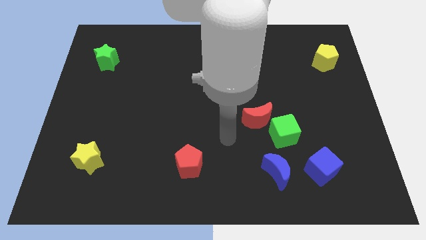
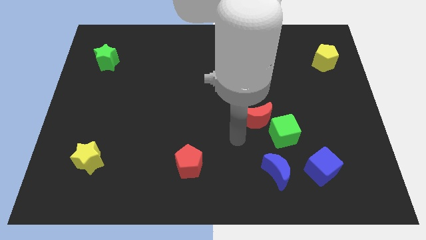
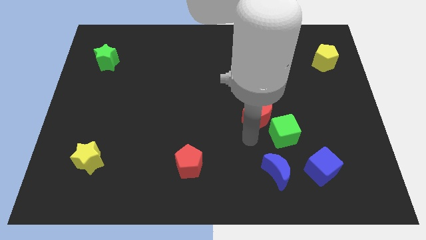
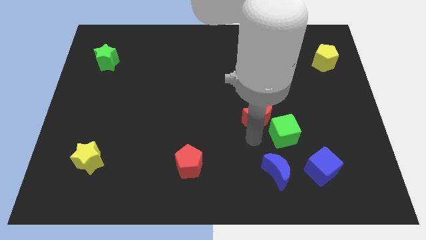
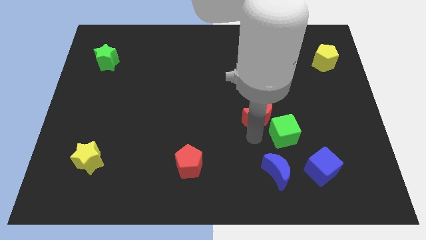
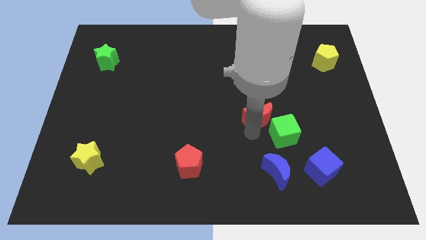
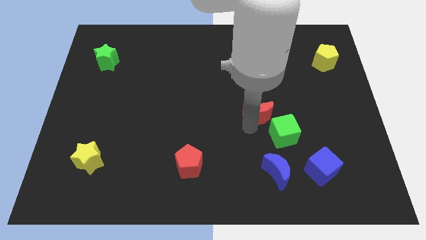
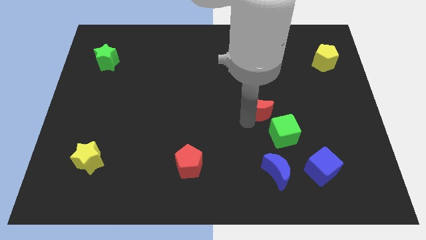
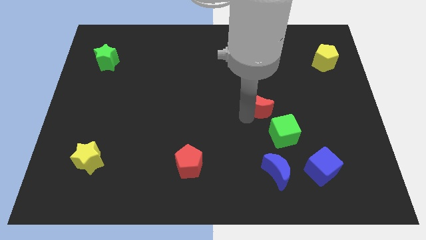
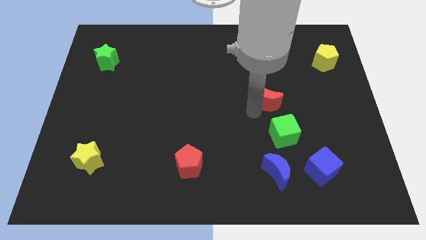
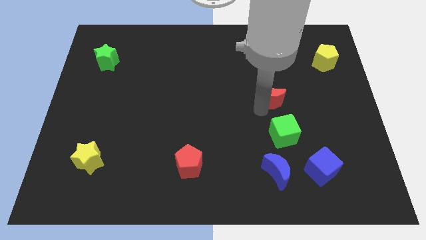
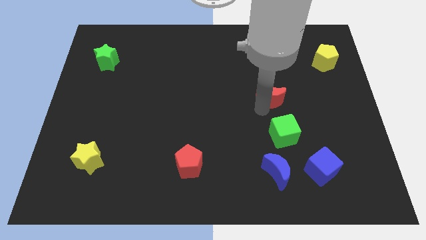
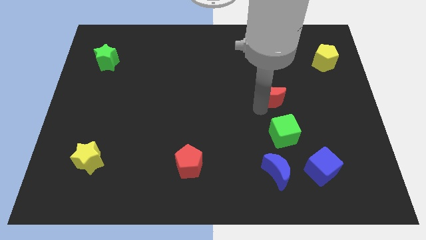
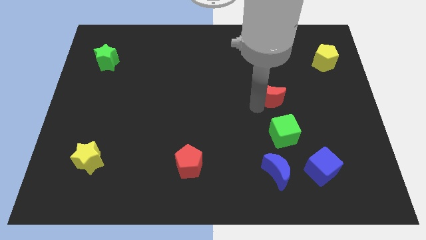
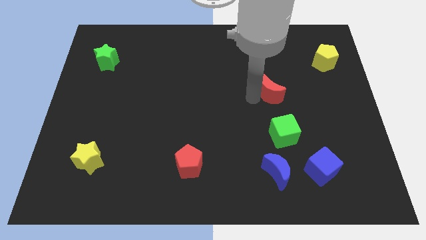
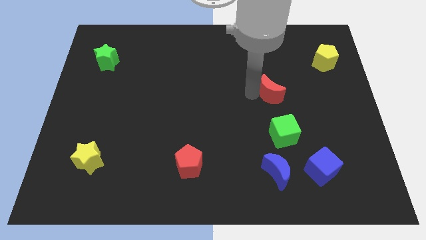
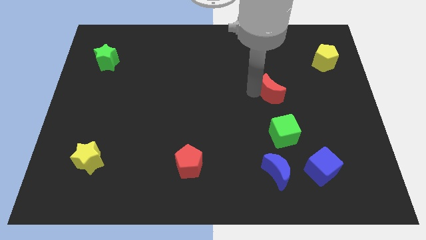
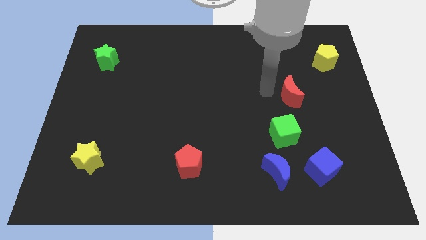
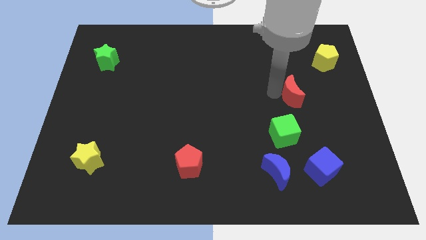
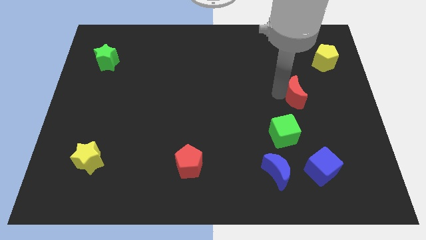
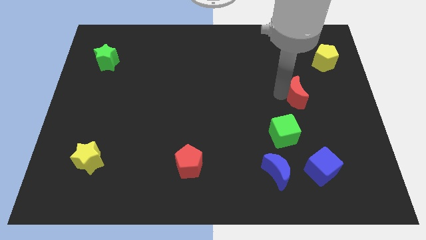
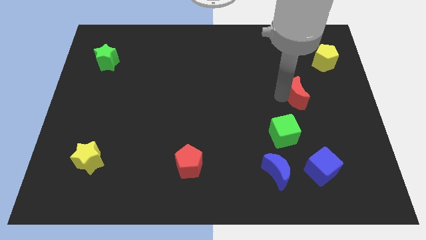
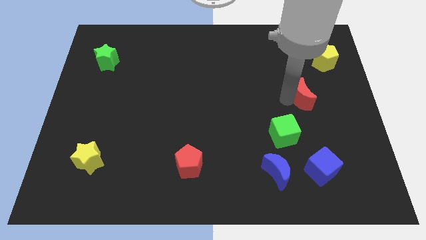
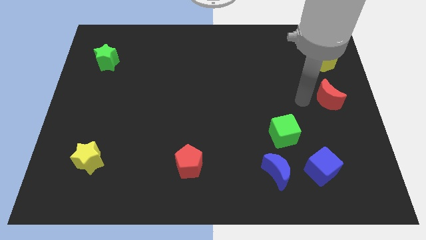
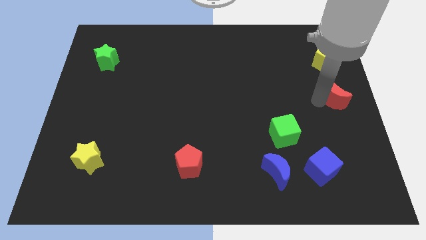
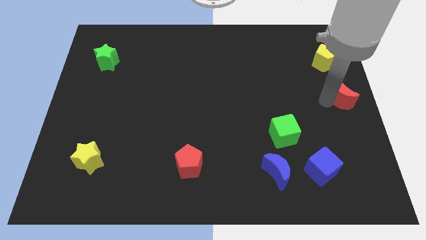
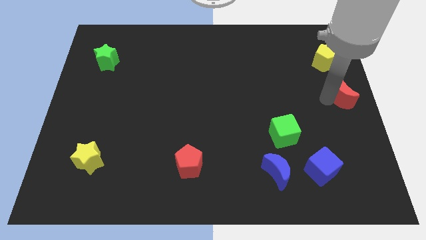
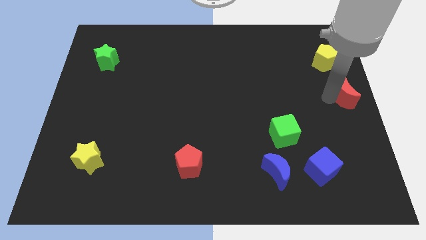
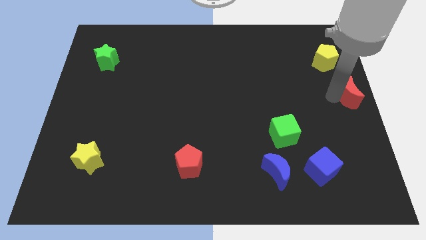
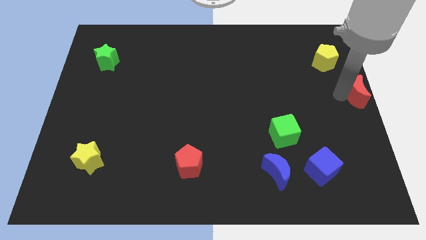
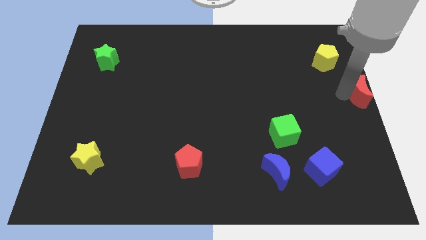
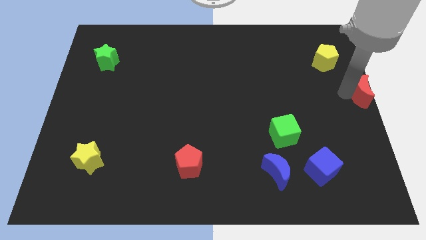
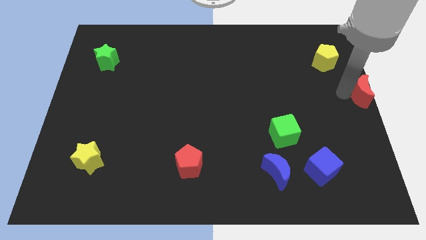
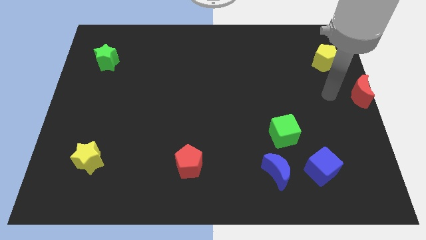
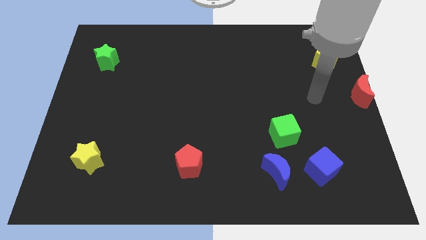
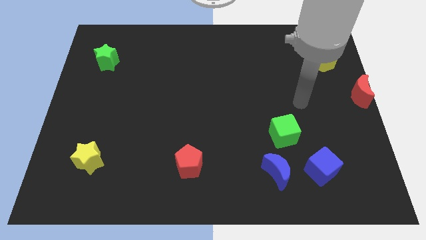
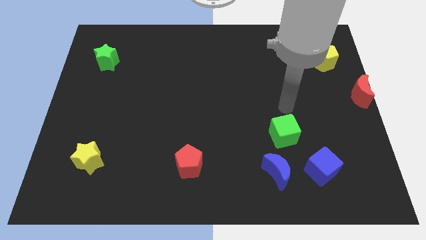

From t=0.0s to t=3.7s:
slide the red moon into the center right

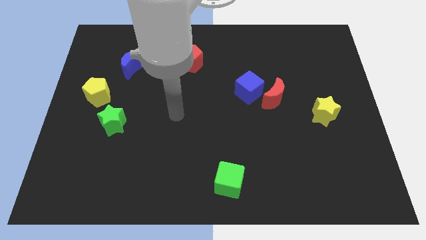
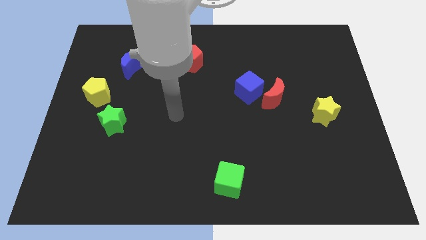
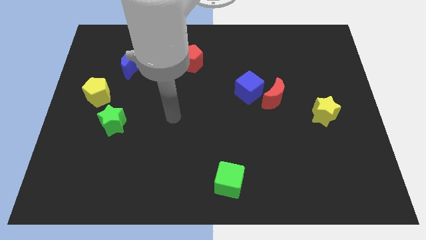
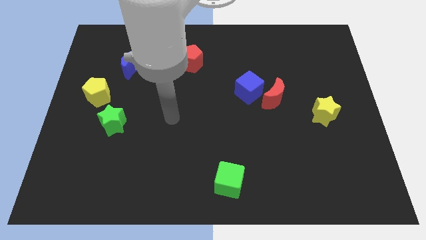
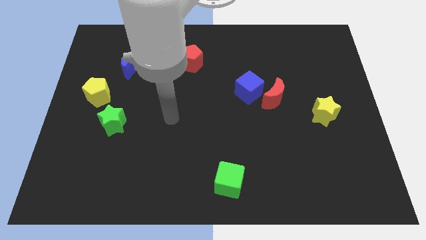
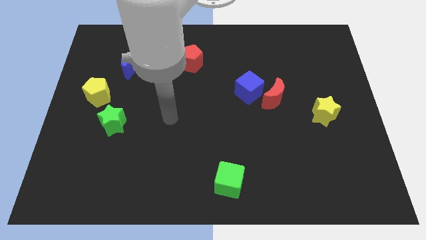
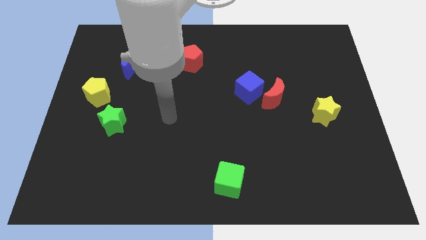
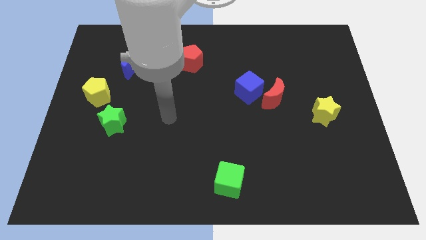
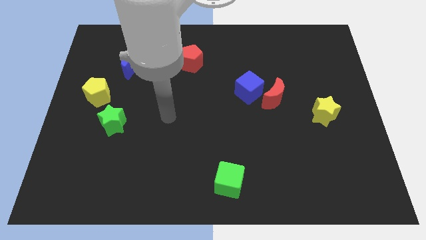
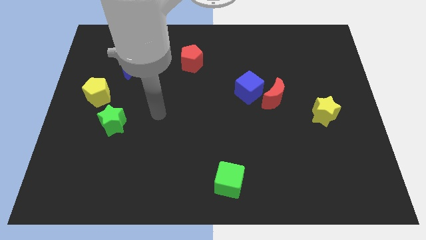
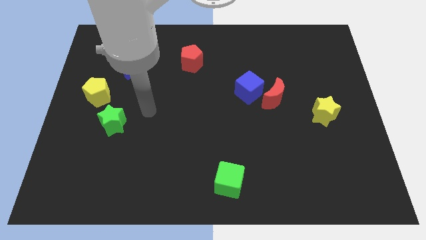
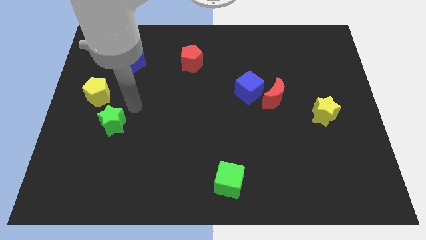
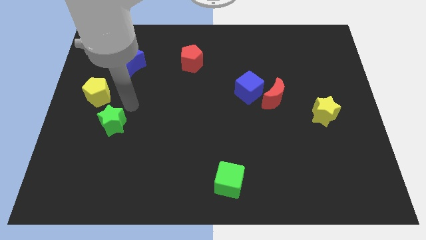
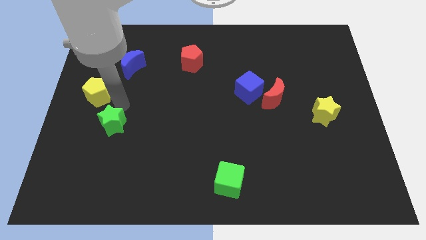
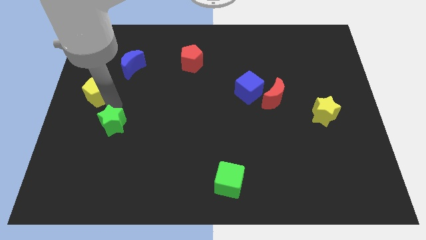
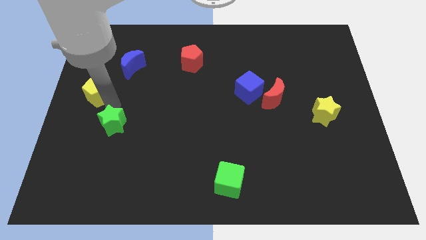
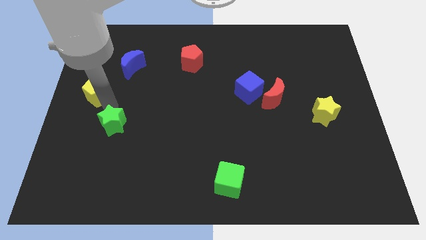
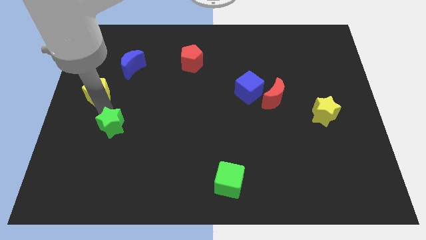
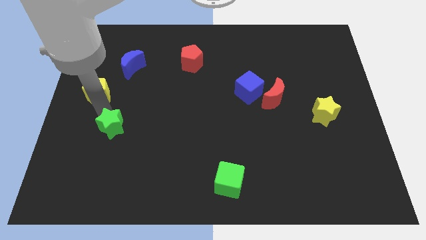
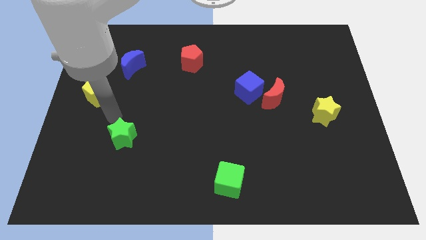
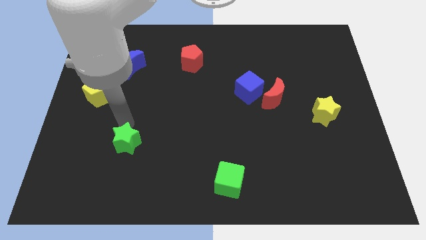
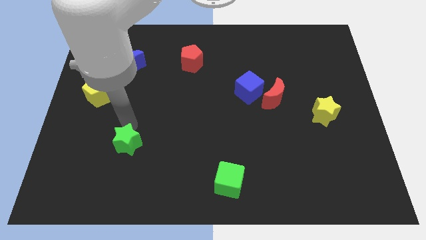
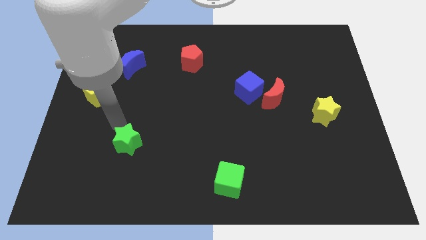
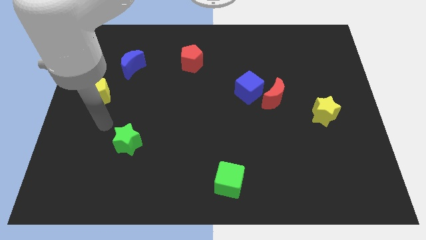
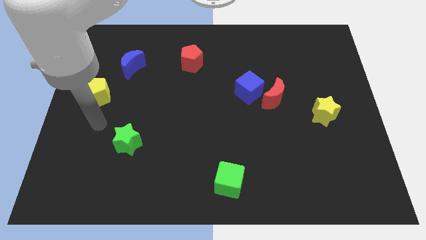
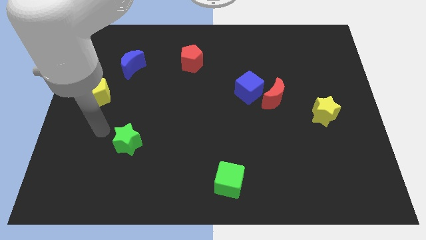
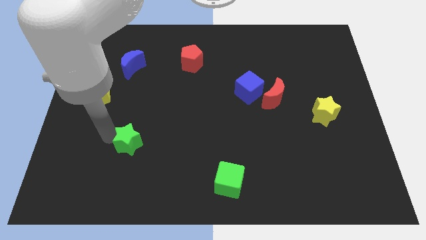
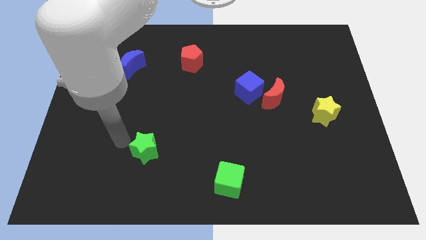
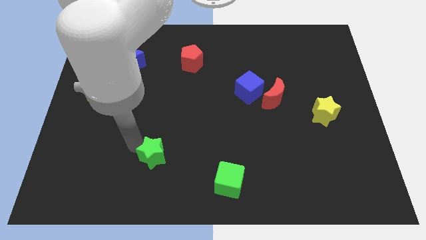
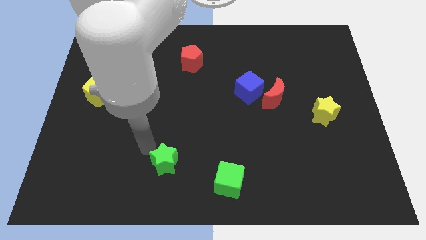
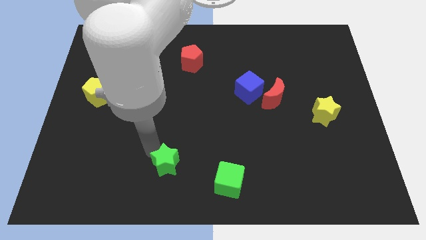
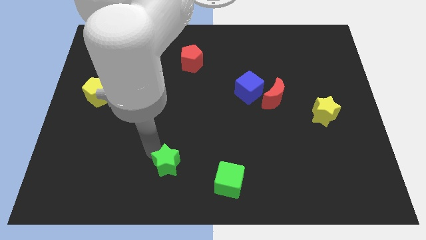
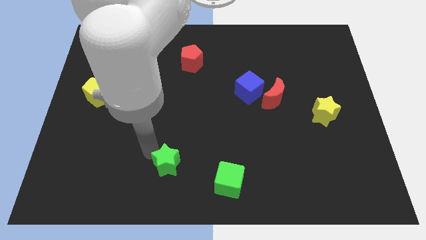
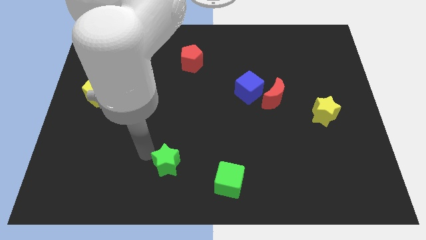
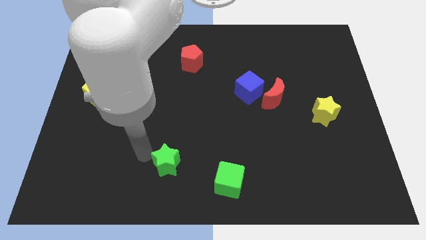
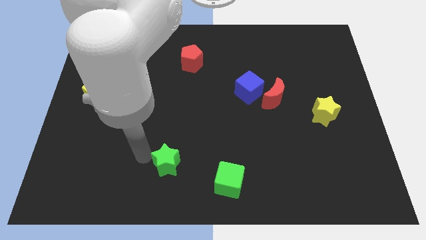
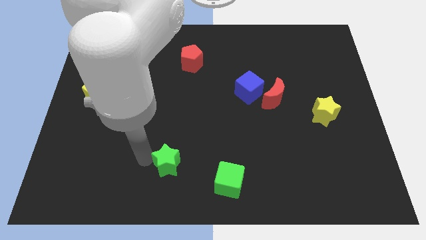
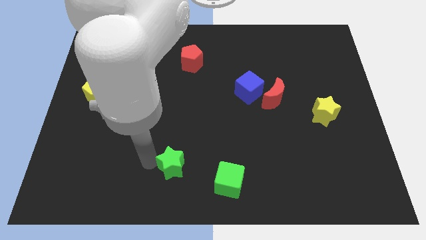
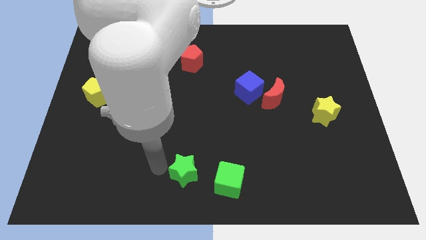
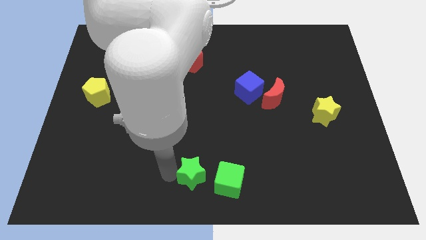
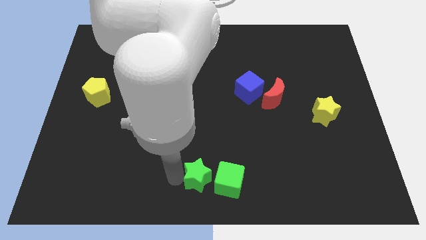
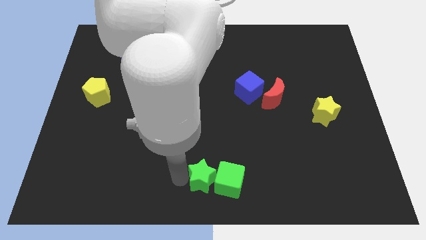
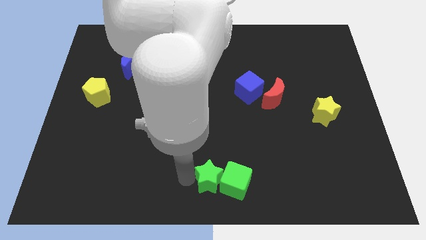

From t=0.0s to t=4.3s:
move green star to the left of green cube

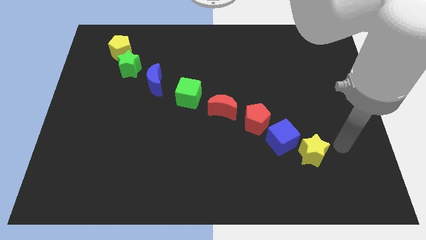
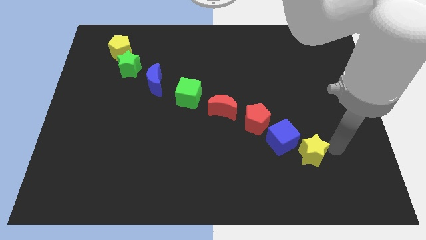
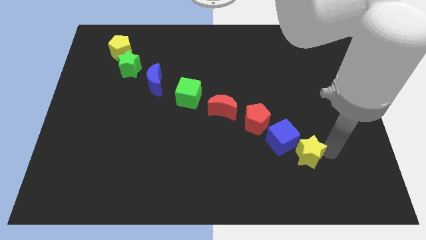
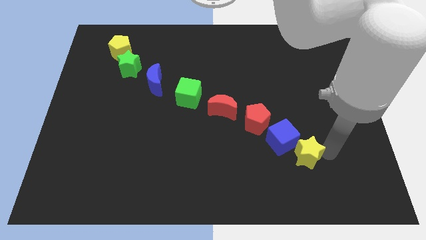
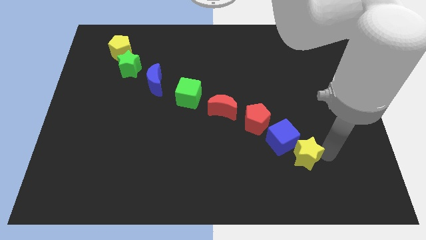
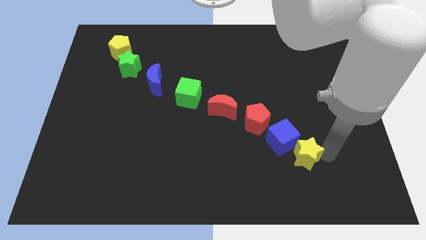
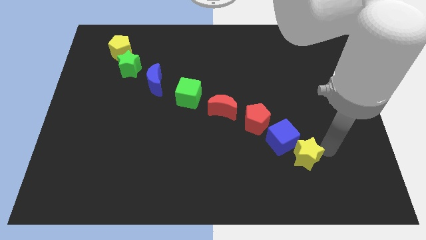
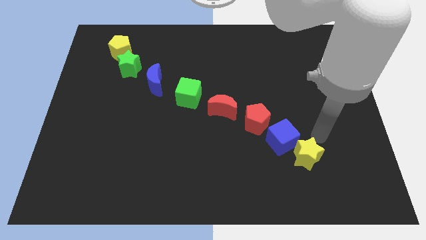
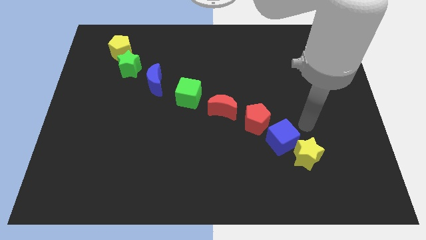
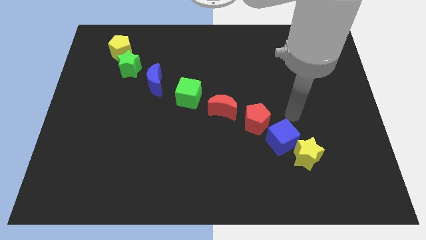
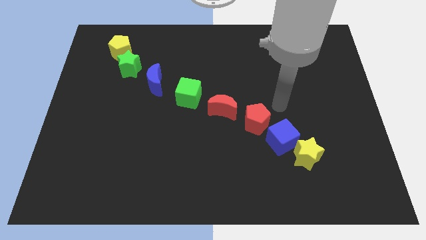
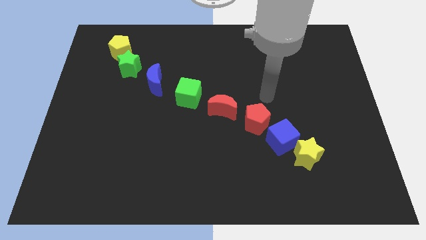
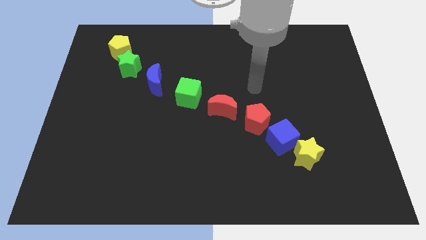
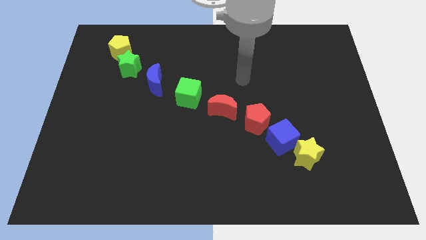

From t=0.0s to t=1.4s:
move the yellow star to the bottom right of the blue cube
